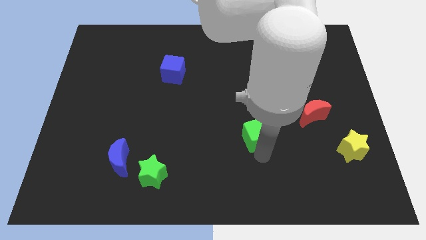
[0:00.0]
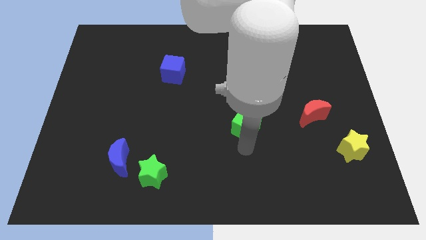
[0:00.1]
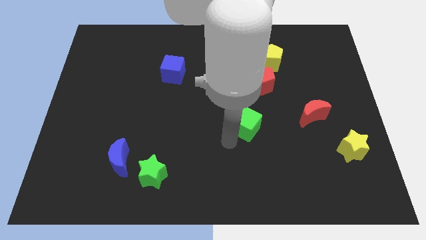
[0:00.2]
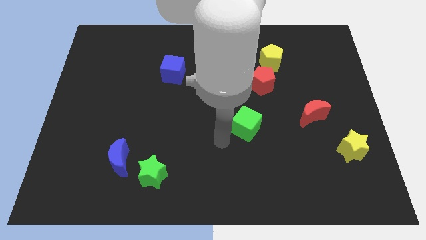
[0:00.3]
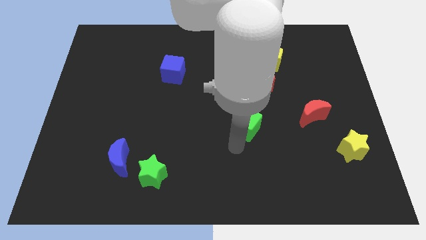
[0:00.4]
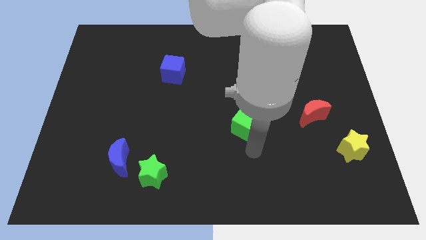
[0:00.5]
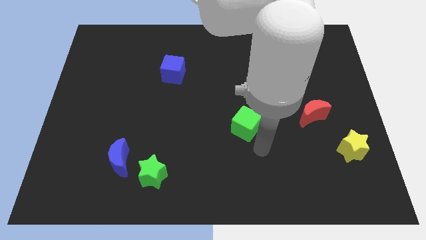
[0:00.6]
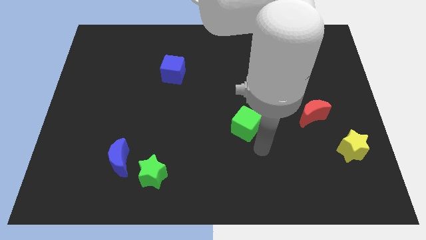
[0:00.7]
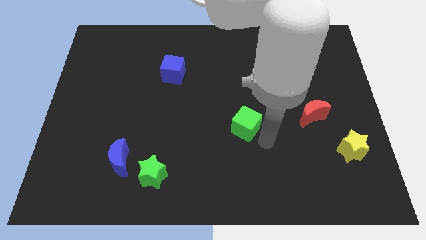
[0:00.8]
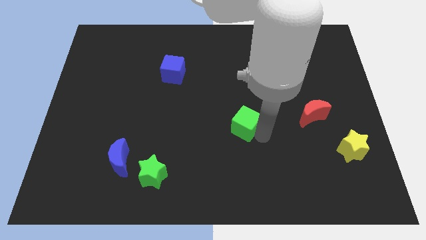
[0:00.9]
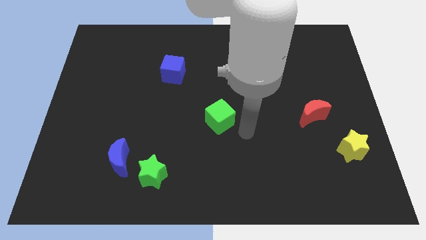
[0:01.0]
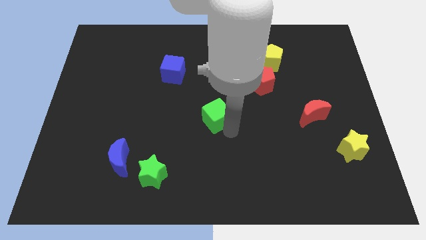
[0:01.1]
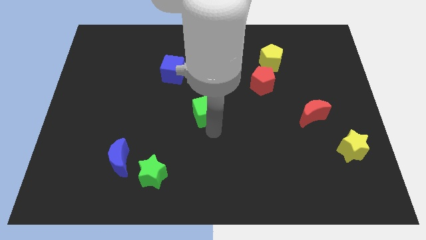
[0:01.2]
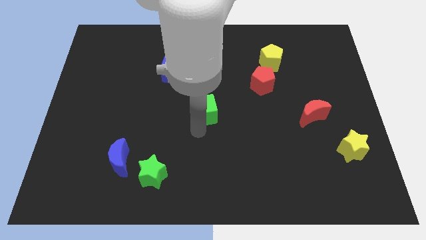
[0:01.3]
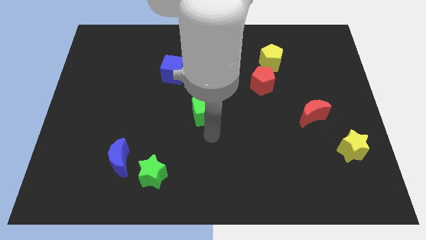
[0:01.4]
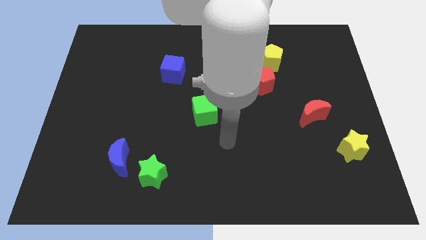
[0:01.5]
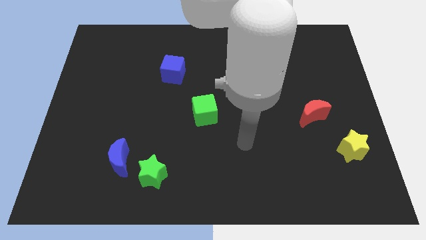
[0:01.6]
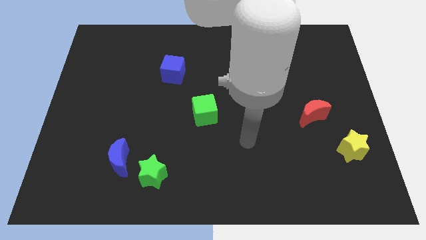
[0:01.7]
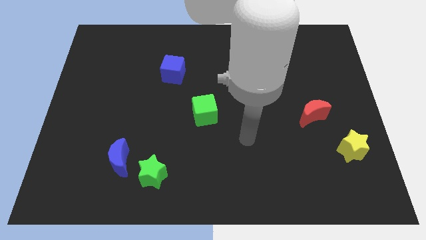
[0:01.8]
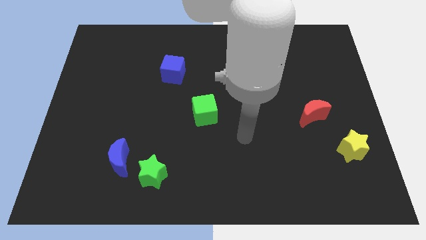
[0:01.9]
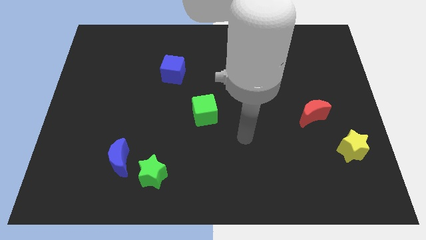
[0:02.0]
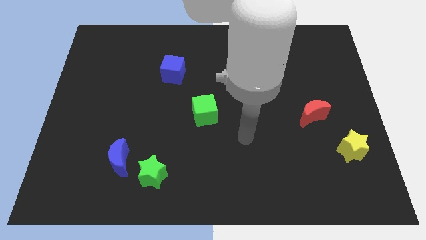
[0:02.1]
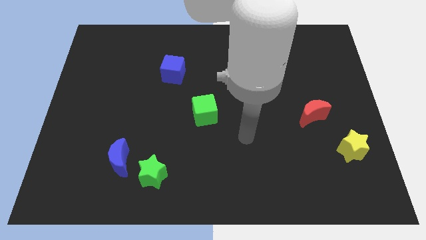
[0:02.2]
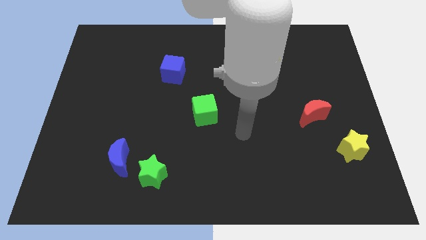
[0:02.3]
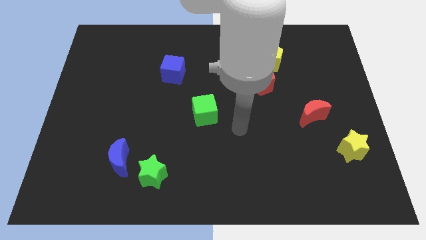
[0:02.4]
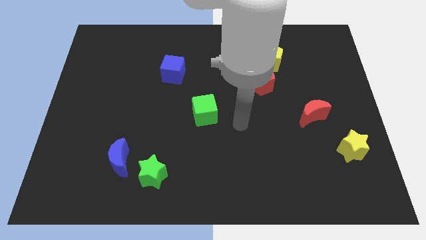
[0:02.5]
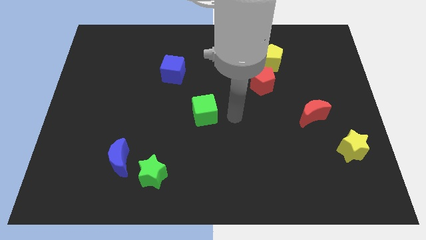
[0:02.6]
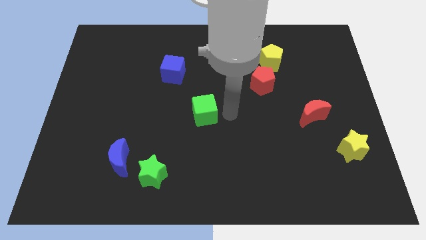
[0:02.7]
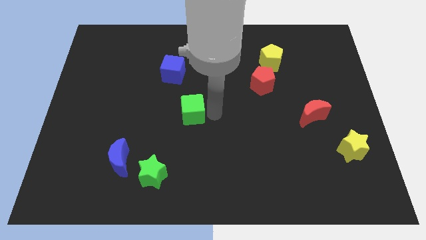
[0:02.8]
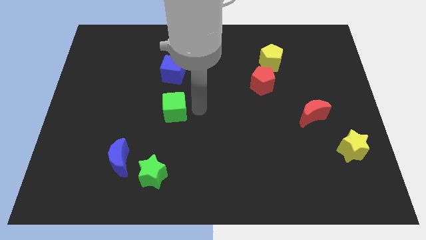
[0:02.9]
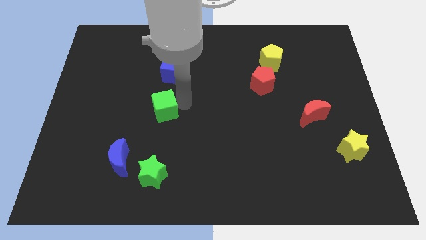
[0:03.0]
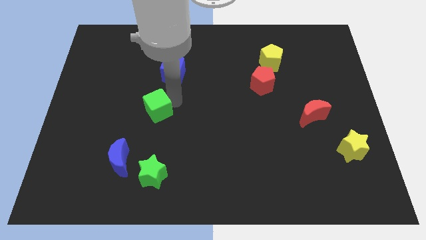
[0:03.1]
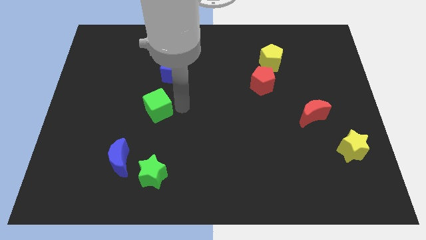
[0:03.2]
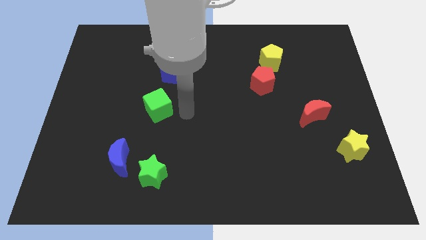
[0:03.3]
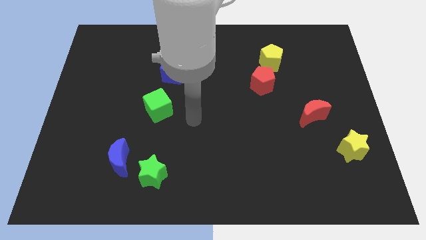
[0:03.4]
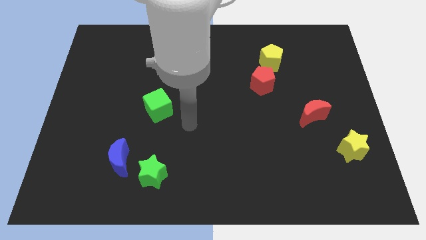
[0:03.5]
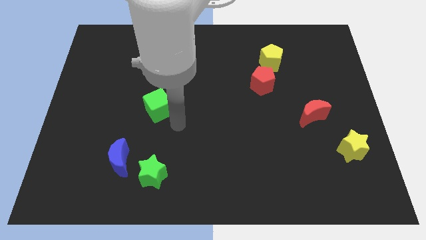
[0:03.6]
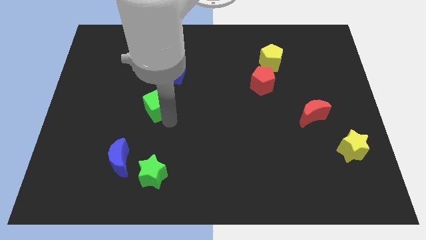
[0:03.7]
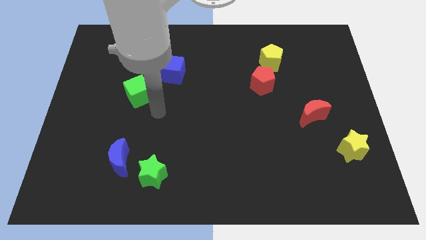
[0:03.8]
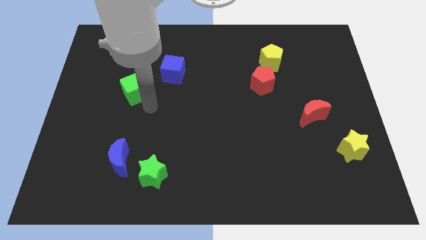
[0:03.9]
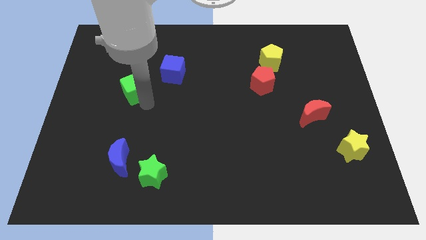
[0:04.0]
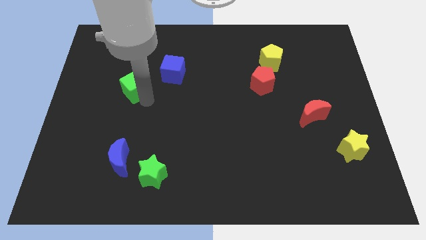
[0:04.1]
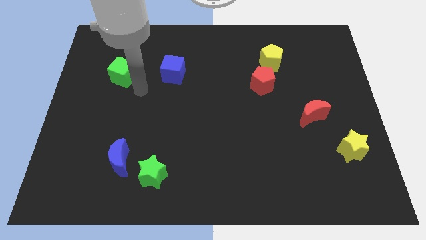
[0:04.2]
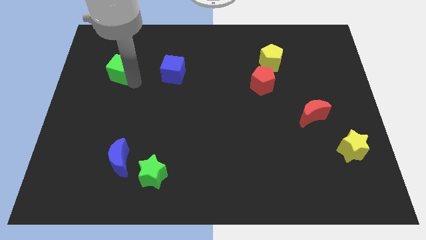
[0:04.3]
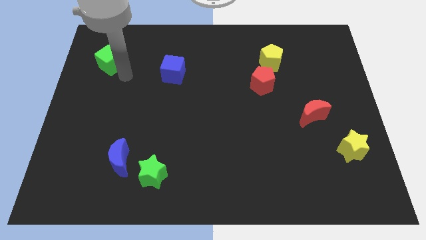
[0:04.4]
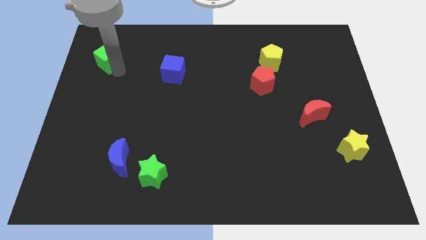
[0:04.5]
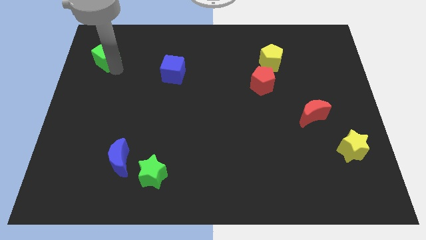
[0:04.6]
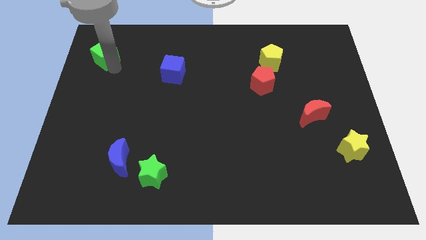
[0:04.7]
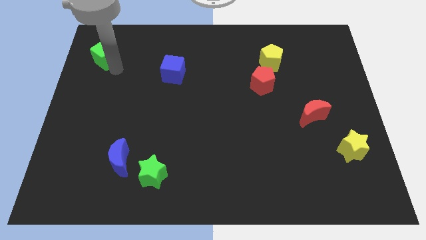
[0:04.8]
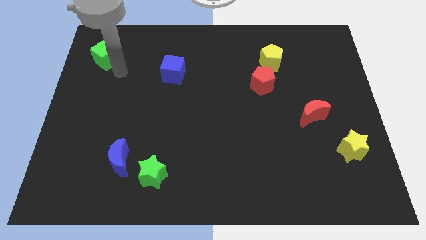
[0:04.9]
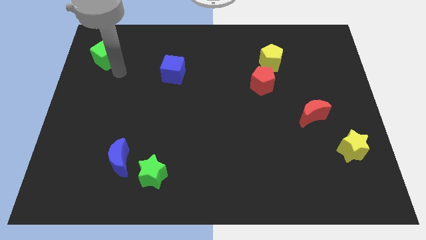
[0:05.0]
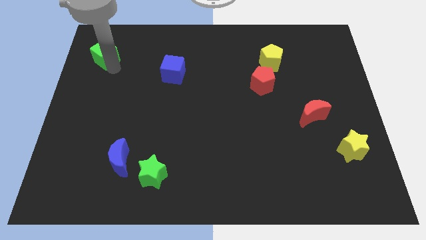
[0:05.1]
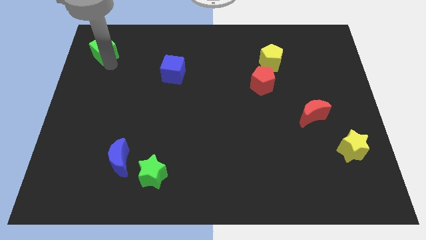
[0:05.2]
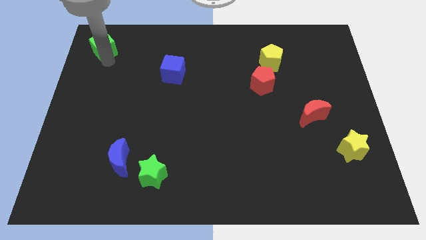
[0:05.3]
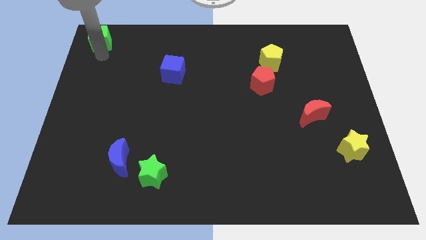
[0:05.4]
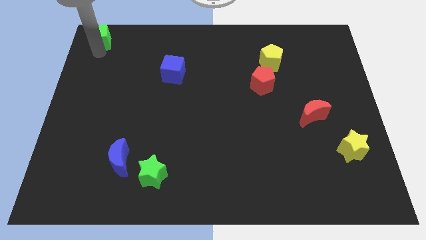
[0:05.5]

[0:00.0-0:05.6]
move the green cube to the top left corner of the board

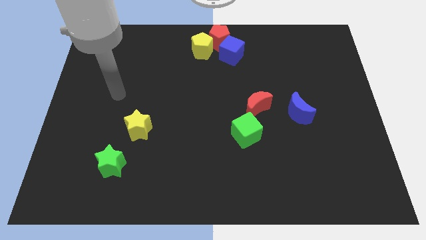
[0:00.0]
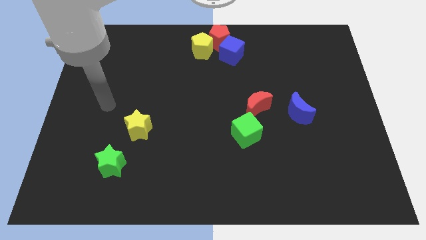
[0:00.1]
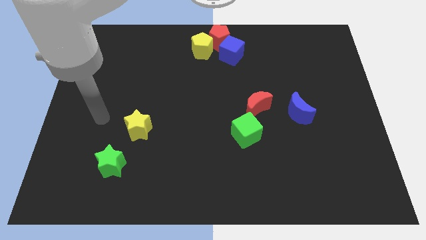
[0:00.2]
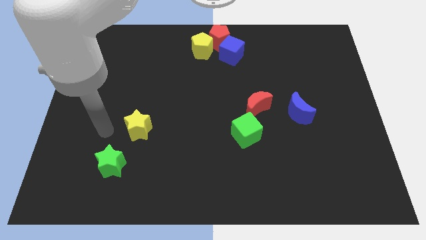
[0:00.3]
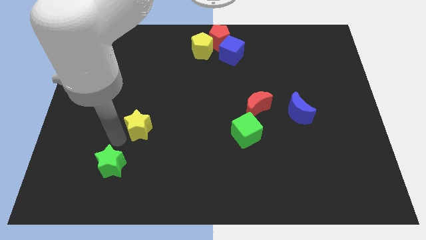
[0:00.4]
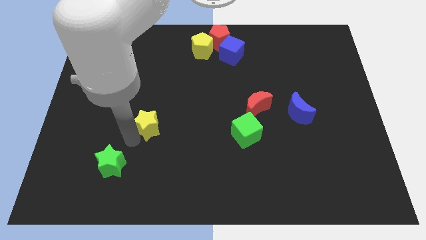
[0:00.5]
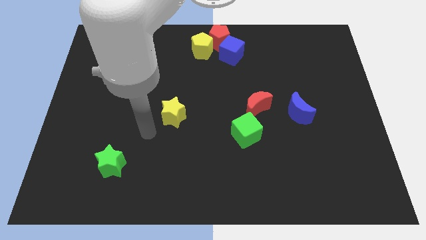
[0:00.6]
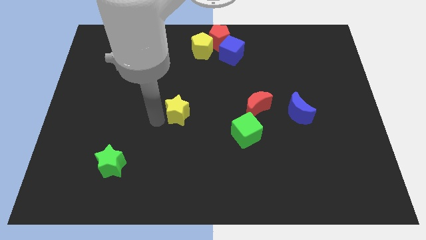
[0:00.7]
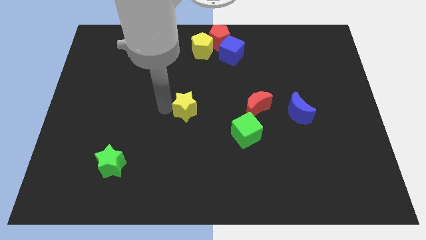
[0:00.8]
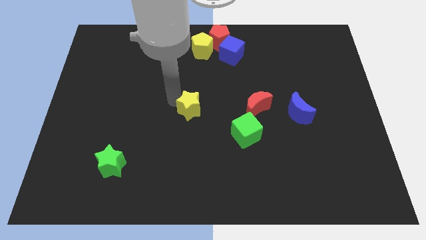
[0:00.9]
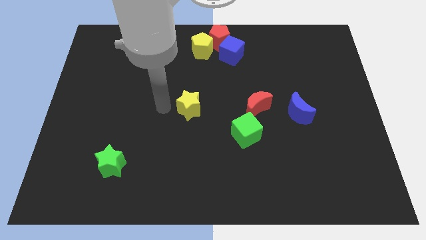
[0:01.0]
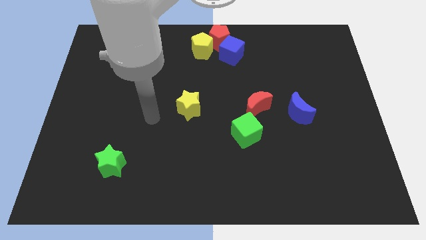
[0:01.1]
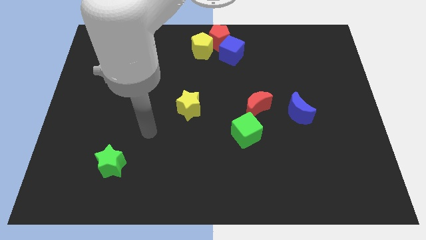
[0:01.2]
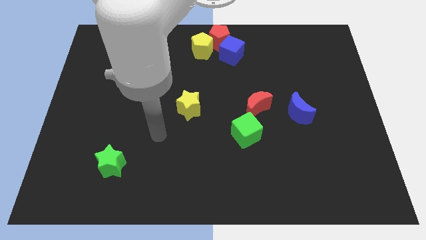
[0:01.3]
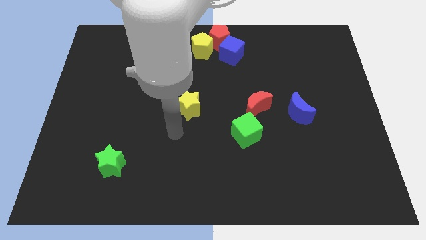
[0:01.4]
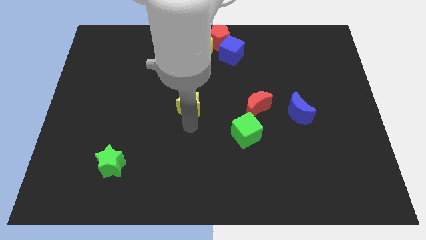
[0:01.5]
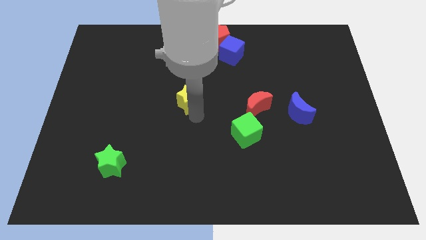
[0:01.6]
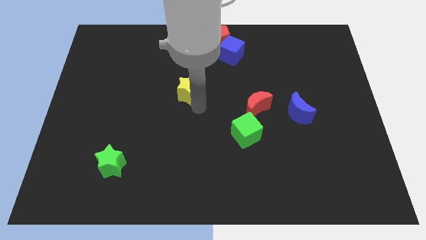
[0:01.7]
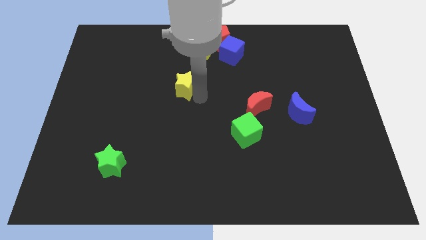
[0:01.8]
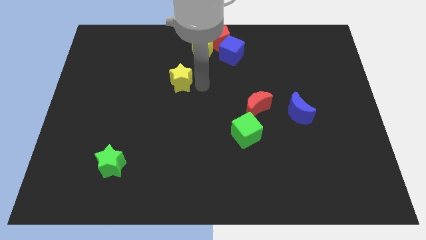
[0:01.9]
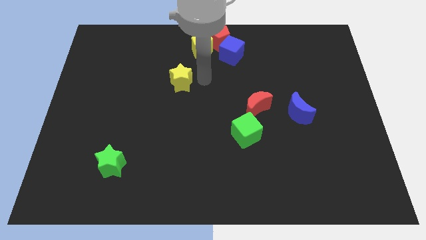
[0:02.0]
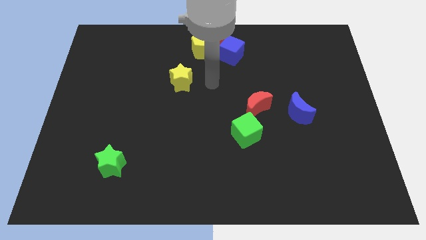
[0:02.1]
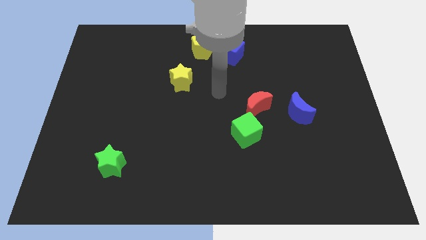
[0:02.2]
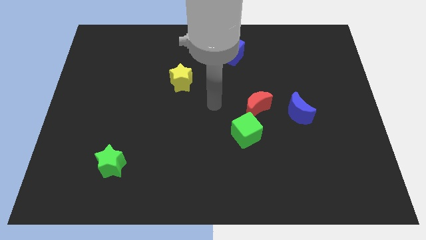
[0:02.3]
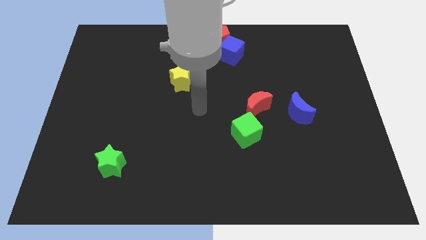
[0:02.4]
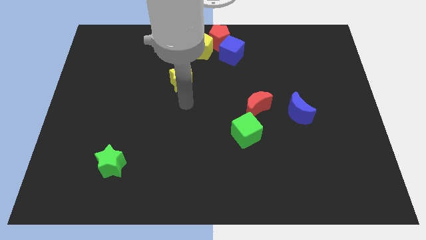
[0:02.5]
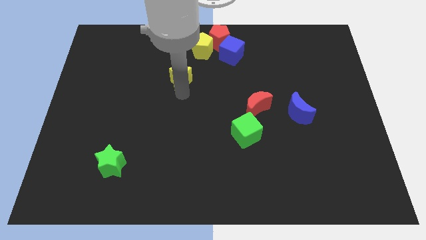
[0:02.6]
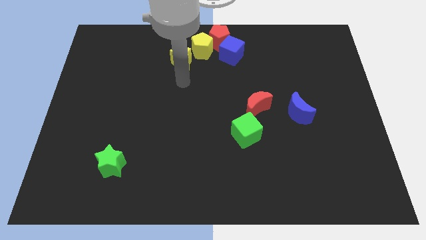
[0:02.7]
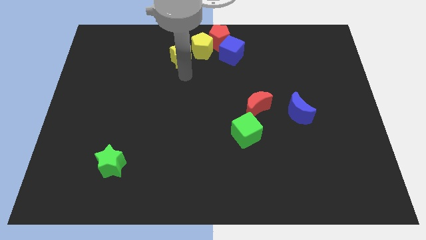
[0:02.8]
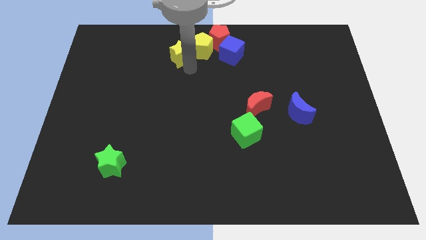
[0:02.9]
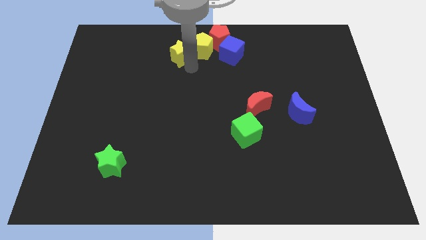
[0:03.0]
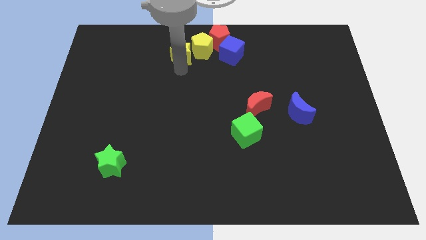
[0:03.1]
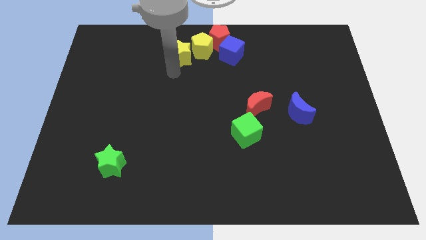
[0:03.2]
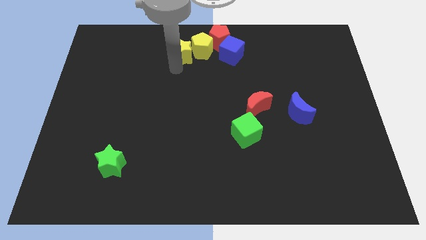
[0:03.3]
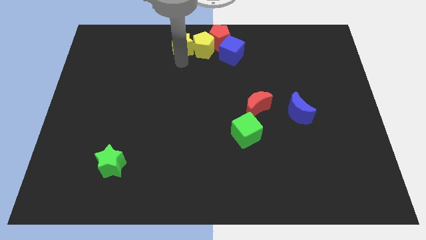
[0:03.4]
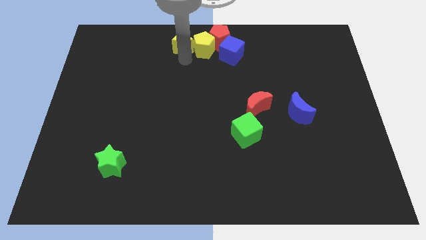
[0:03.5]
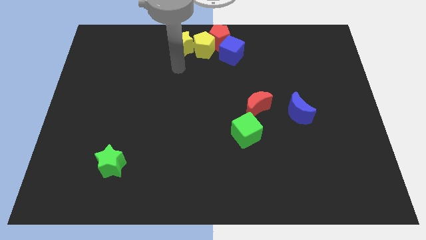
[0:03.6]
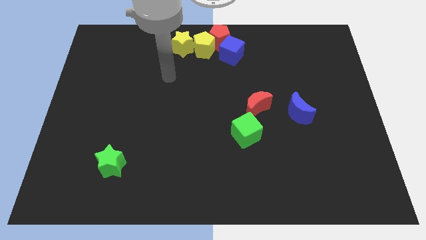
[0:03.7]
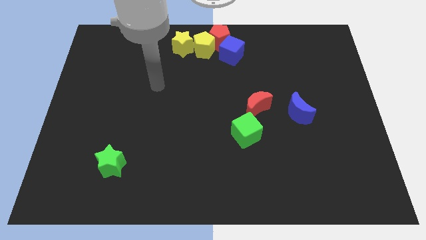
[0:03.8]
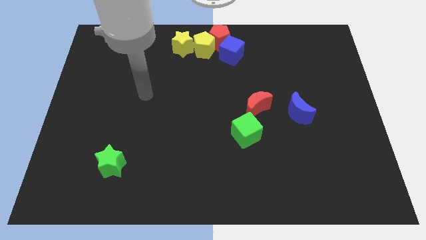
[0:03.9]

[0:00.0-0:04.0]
push the yellow star into the yellow pentagon
